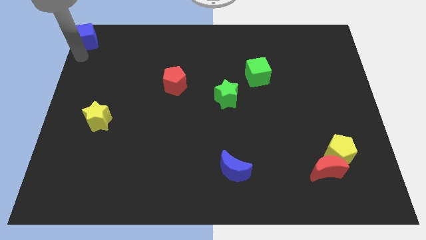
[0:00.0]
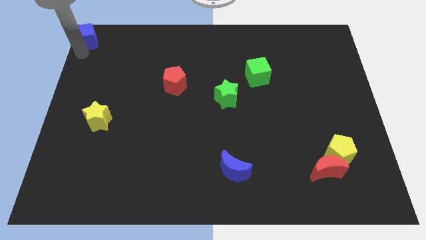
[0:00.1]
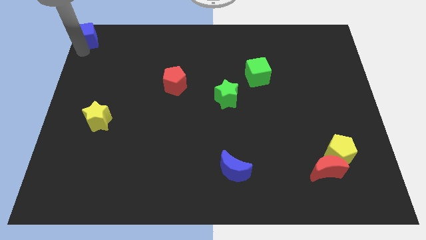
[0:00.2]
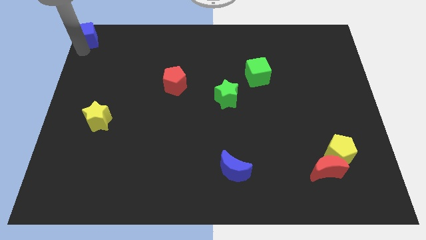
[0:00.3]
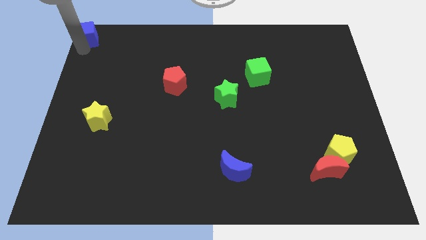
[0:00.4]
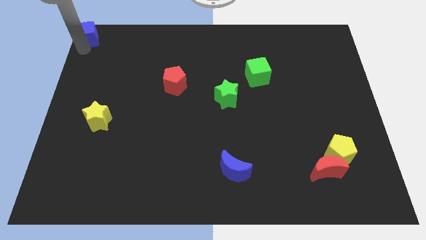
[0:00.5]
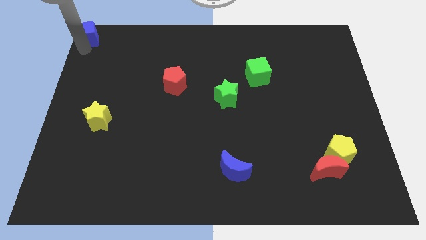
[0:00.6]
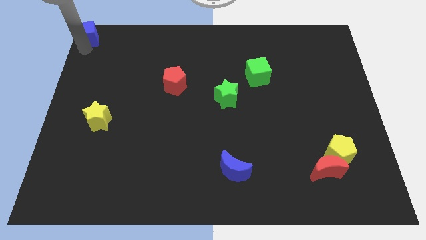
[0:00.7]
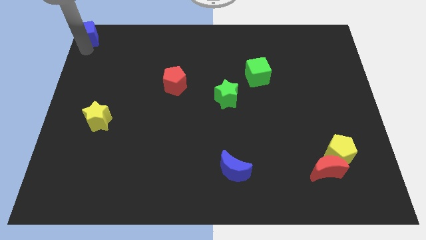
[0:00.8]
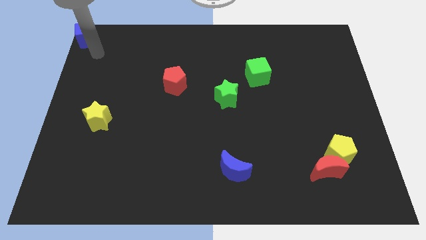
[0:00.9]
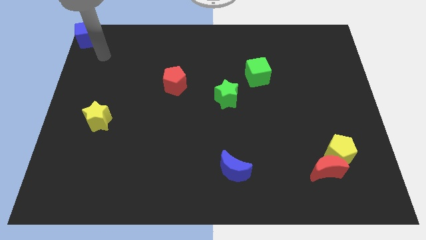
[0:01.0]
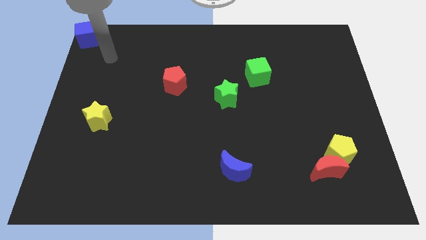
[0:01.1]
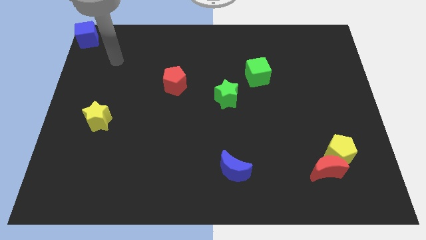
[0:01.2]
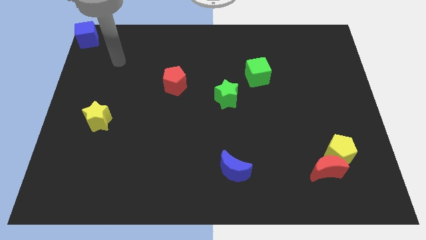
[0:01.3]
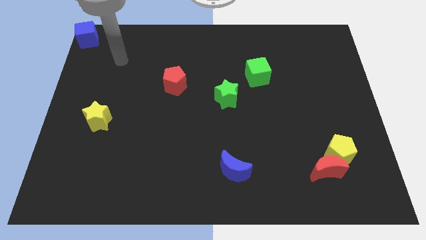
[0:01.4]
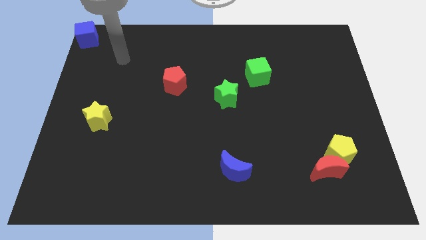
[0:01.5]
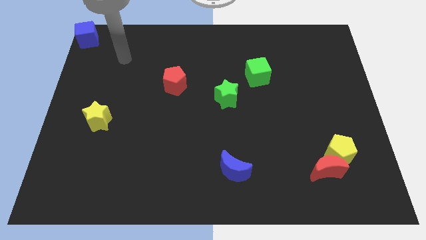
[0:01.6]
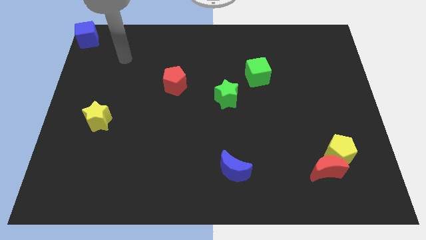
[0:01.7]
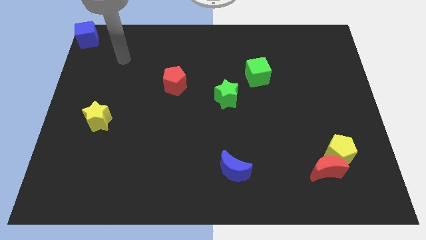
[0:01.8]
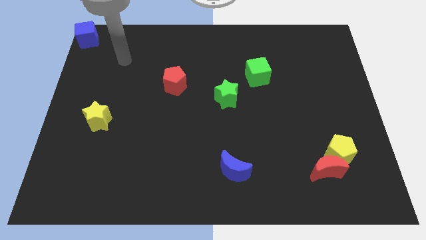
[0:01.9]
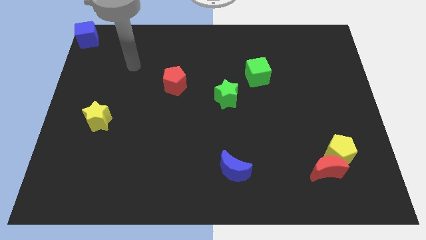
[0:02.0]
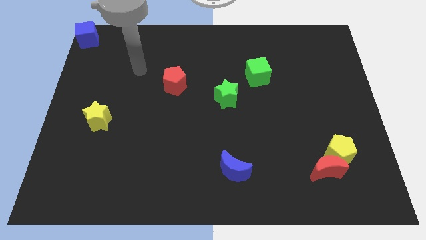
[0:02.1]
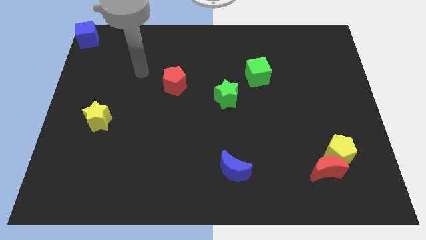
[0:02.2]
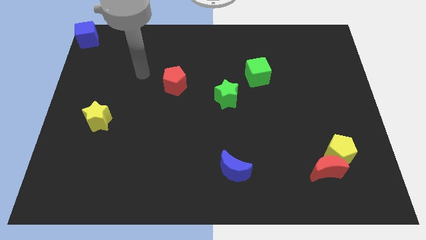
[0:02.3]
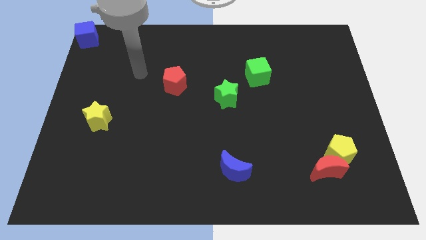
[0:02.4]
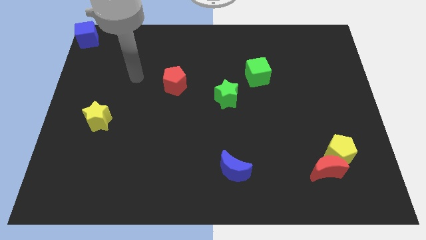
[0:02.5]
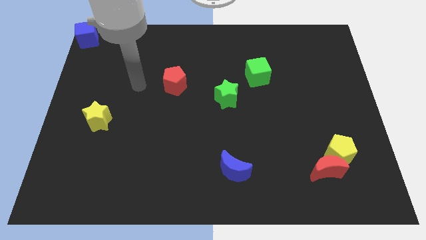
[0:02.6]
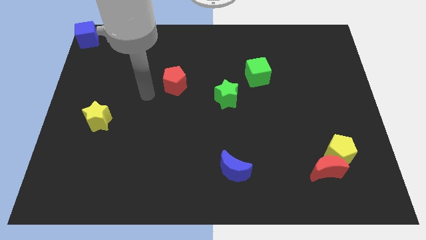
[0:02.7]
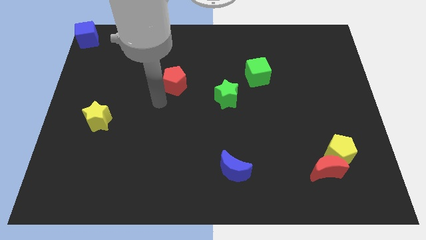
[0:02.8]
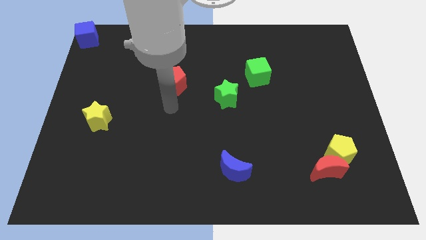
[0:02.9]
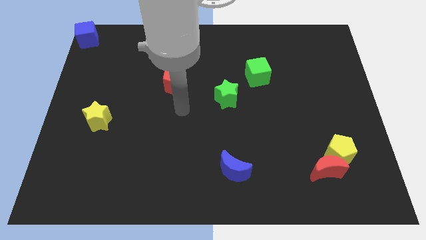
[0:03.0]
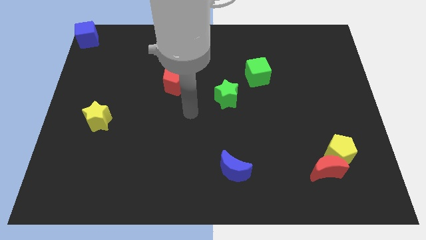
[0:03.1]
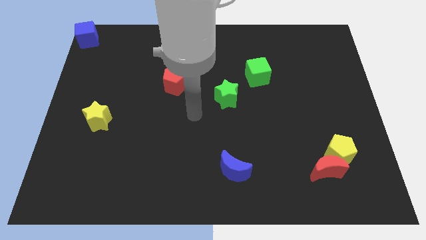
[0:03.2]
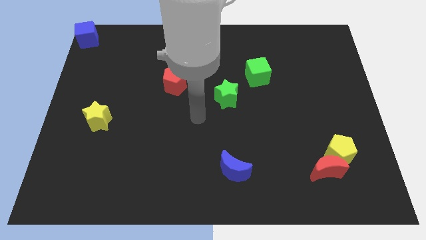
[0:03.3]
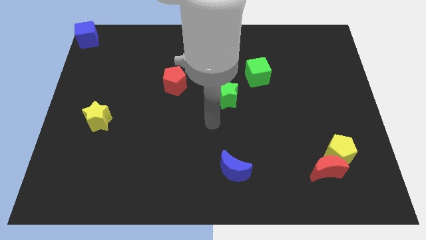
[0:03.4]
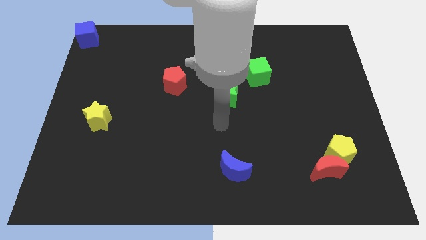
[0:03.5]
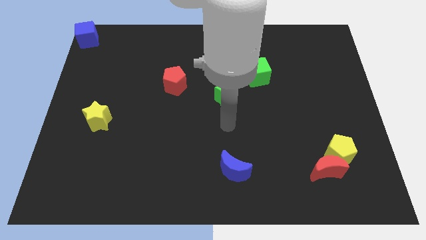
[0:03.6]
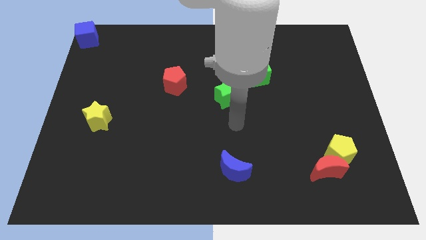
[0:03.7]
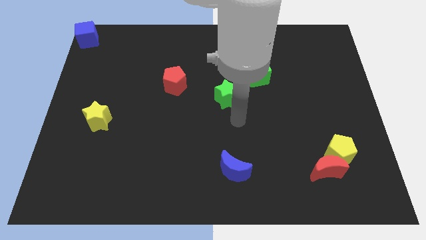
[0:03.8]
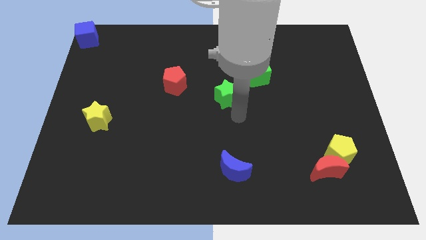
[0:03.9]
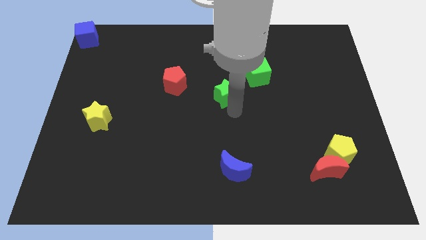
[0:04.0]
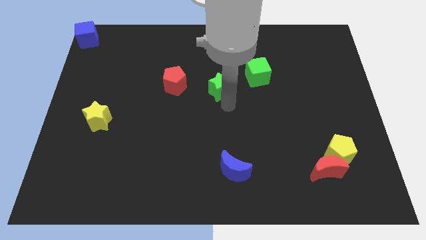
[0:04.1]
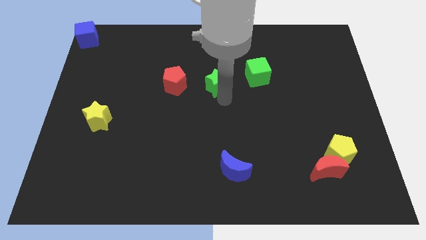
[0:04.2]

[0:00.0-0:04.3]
move arm near green cube

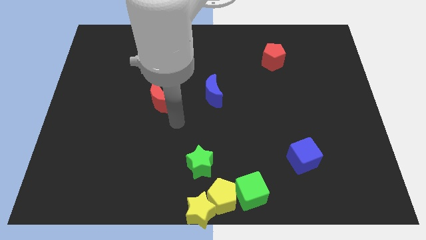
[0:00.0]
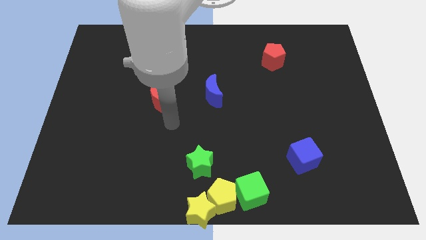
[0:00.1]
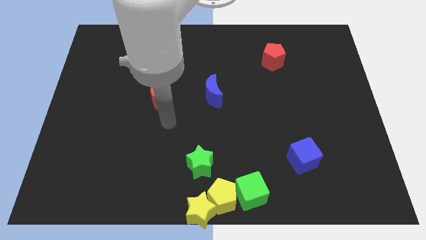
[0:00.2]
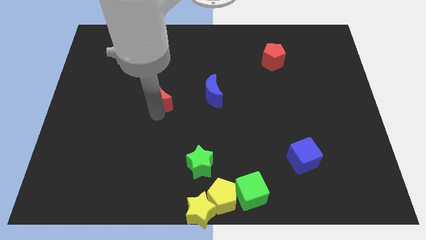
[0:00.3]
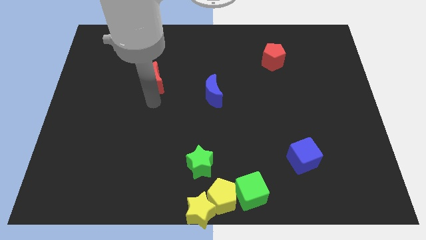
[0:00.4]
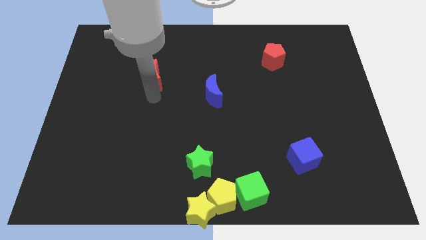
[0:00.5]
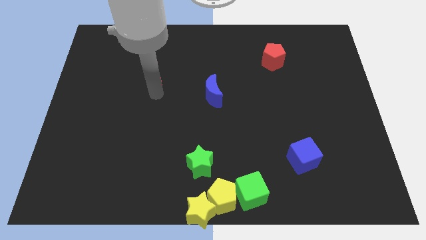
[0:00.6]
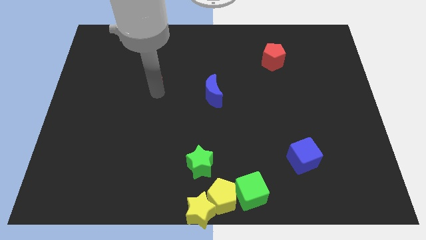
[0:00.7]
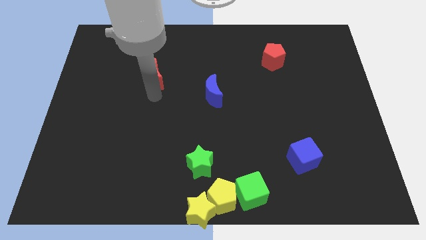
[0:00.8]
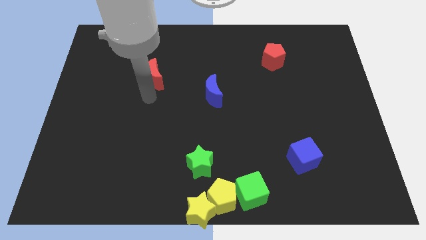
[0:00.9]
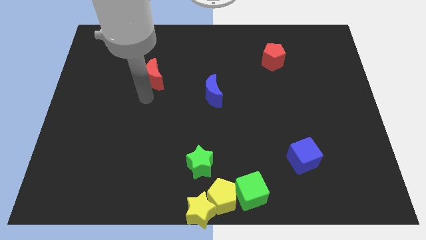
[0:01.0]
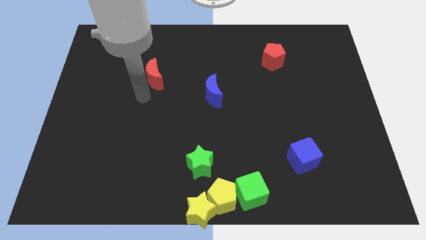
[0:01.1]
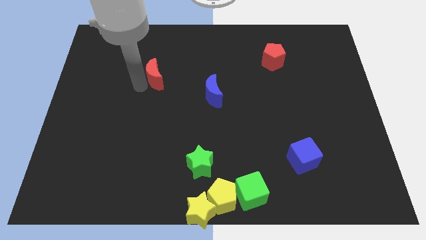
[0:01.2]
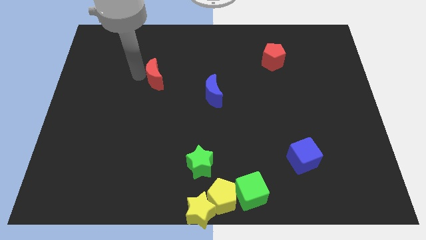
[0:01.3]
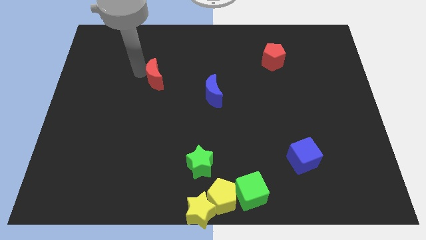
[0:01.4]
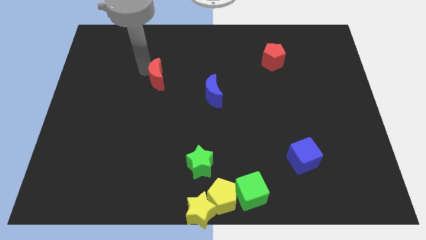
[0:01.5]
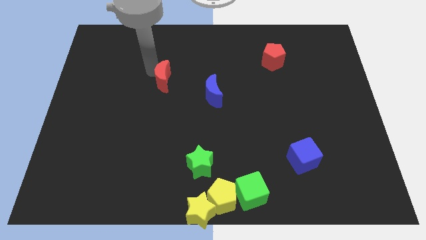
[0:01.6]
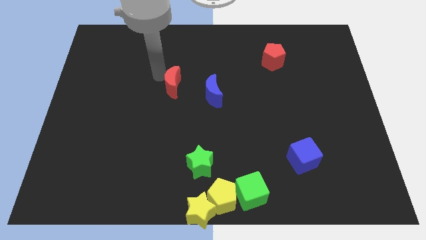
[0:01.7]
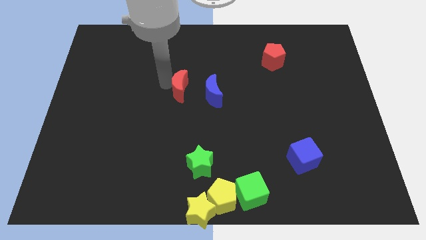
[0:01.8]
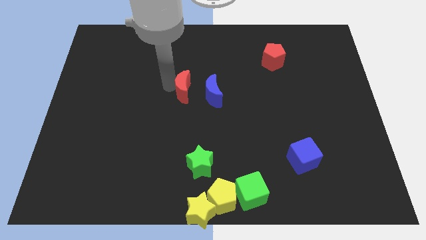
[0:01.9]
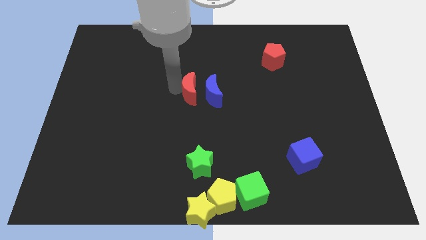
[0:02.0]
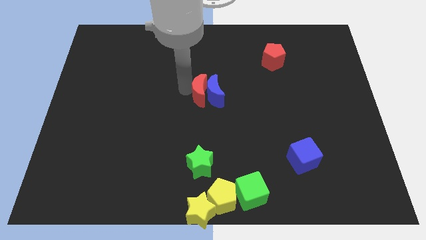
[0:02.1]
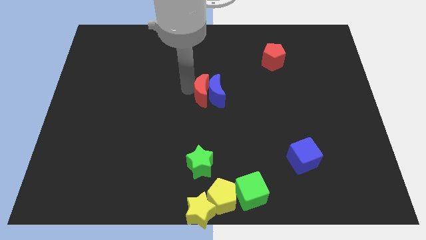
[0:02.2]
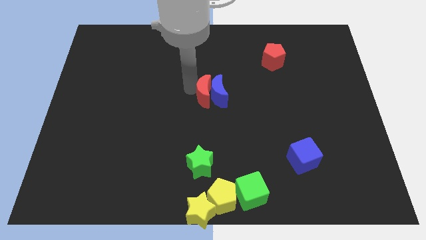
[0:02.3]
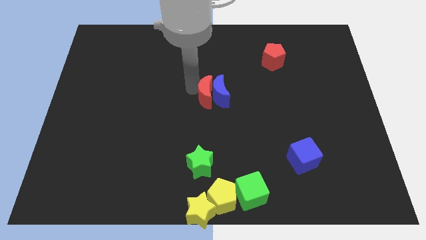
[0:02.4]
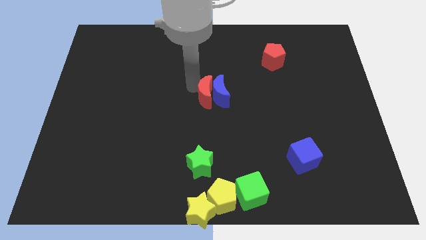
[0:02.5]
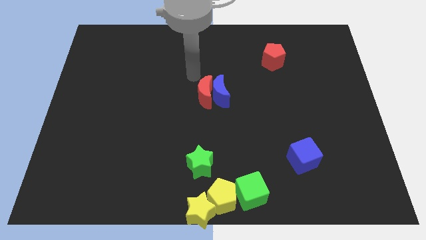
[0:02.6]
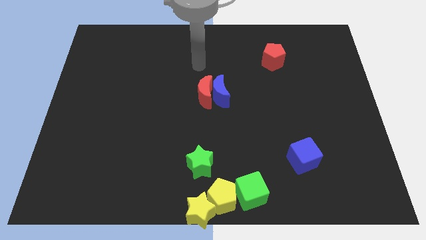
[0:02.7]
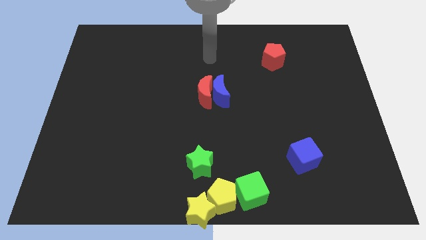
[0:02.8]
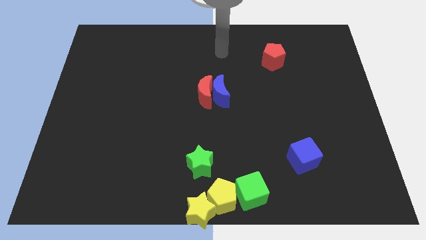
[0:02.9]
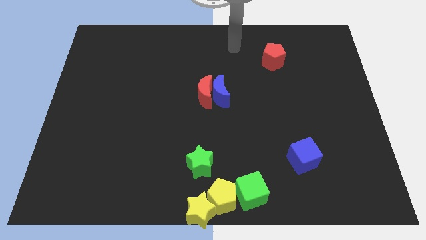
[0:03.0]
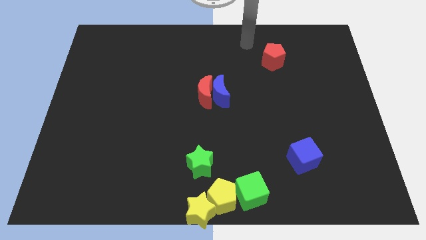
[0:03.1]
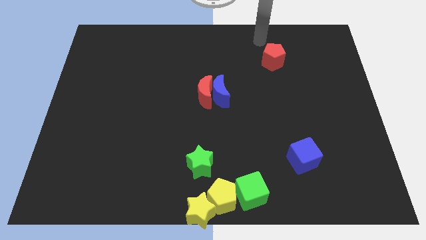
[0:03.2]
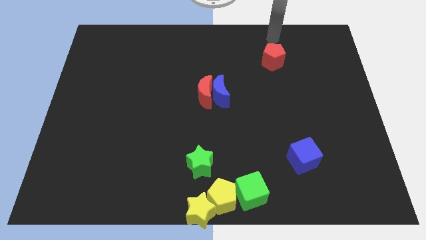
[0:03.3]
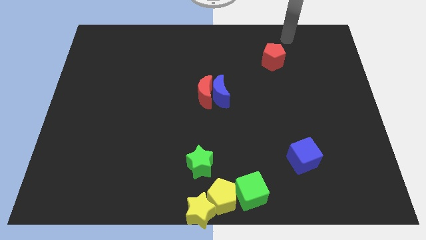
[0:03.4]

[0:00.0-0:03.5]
touch blue crescent with red crescent

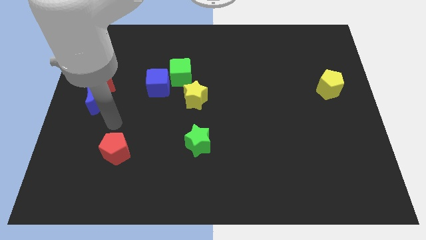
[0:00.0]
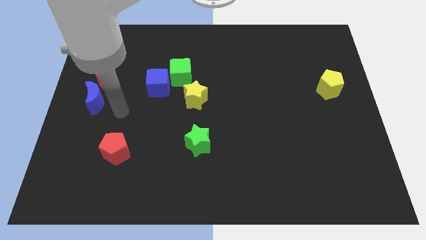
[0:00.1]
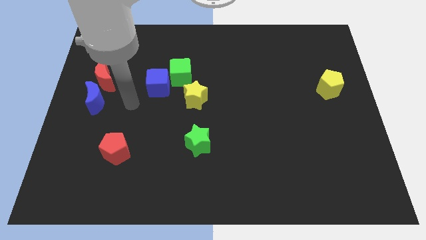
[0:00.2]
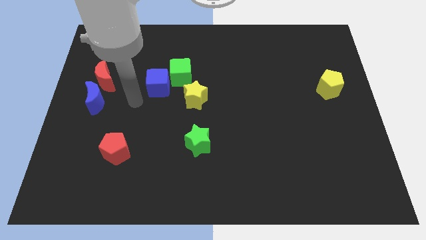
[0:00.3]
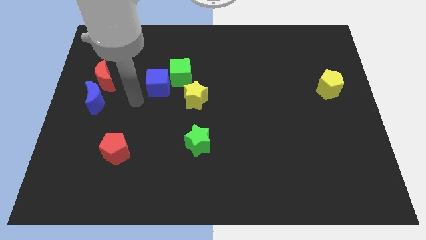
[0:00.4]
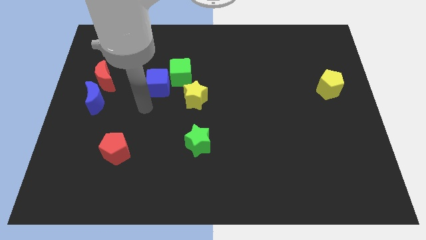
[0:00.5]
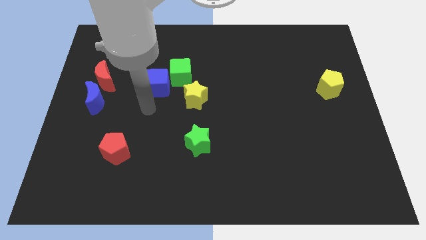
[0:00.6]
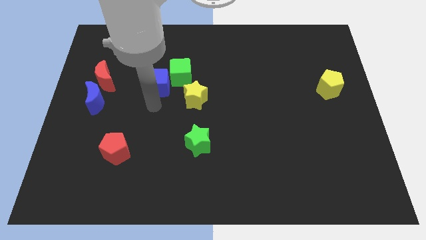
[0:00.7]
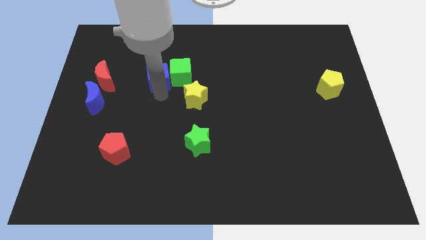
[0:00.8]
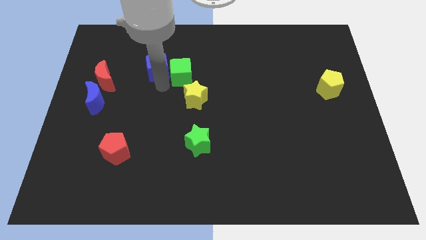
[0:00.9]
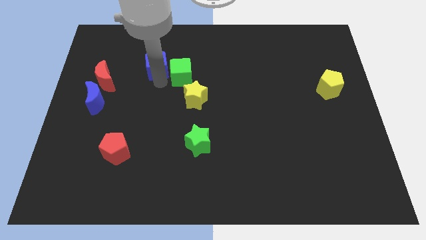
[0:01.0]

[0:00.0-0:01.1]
slightly push the blue cube upwards of the board
